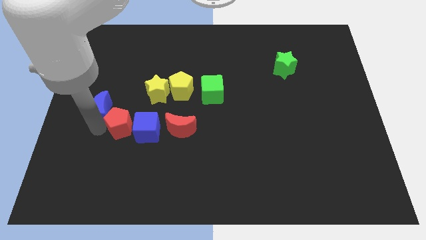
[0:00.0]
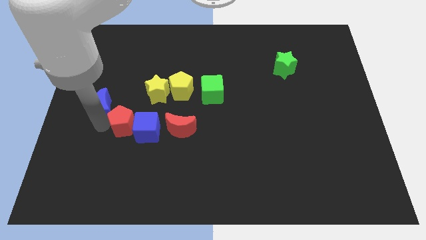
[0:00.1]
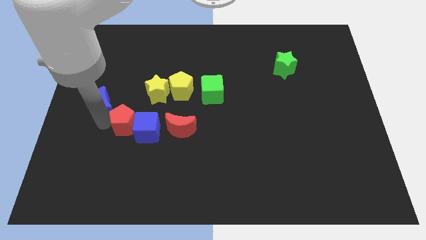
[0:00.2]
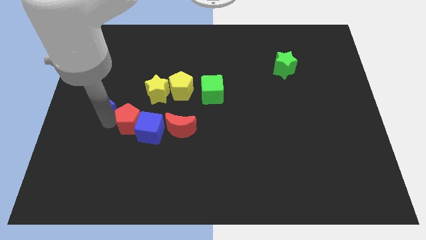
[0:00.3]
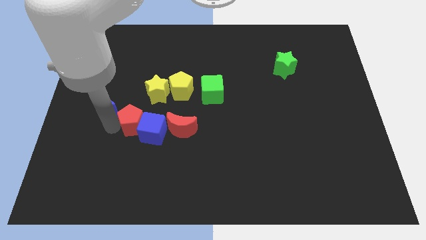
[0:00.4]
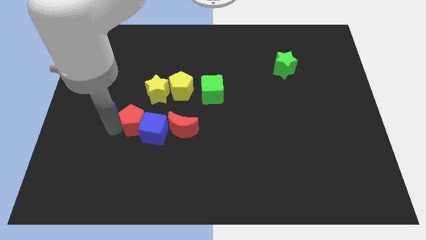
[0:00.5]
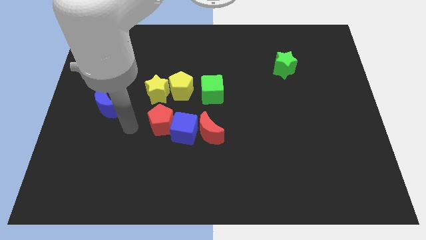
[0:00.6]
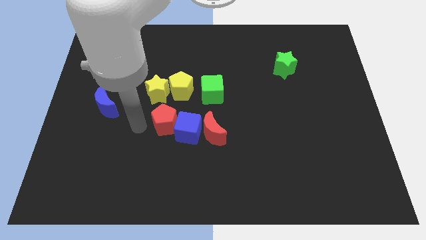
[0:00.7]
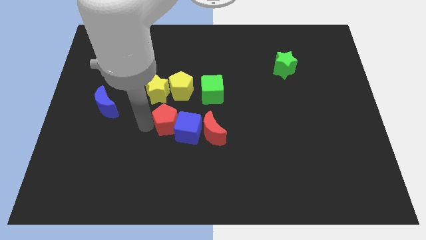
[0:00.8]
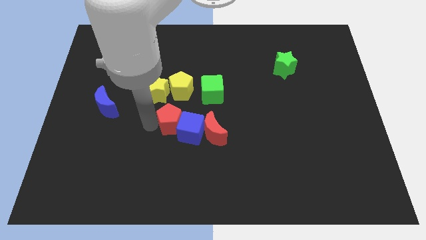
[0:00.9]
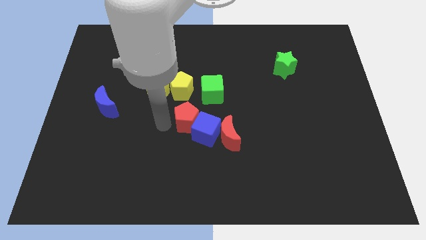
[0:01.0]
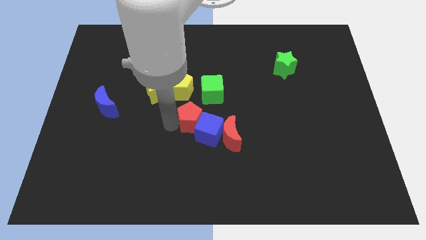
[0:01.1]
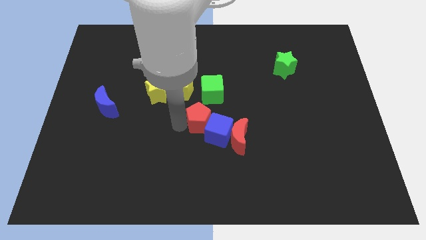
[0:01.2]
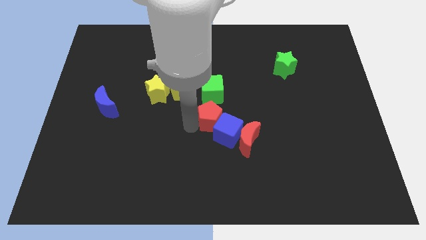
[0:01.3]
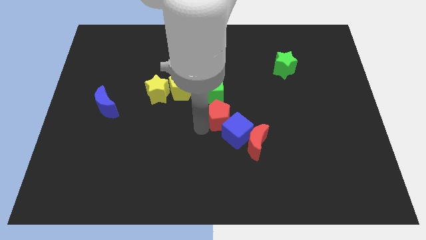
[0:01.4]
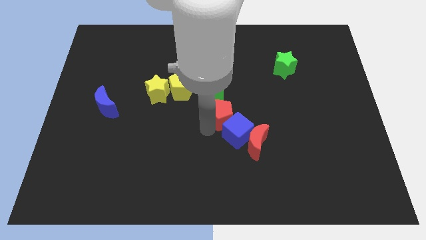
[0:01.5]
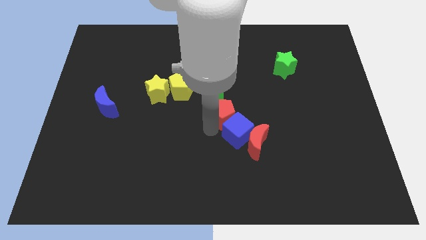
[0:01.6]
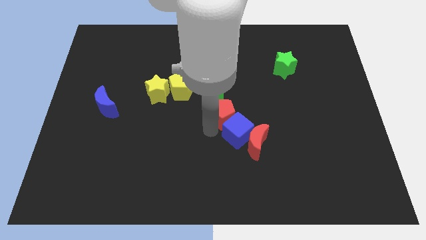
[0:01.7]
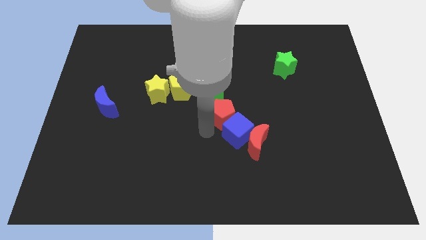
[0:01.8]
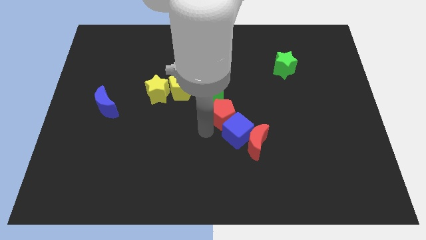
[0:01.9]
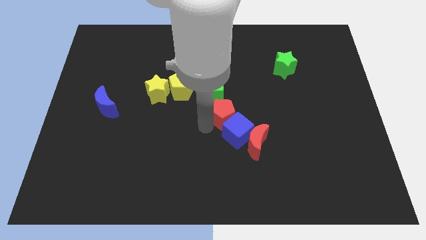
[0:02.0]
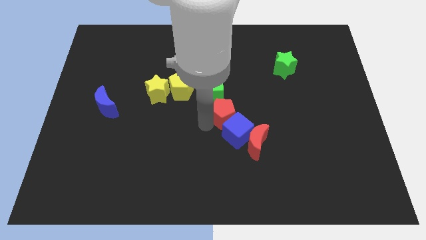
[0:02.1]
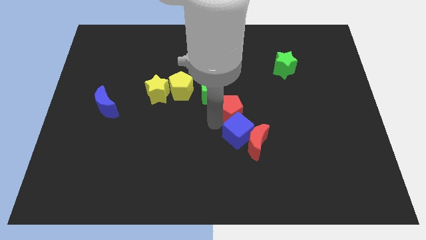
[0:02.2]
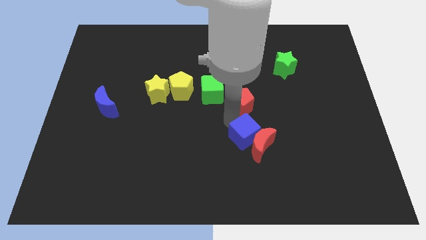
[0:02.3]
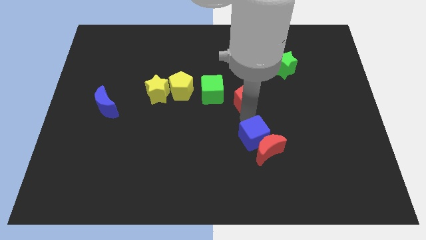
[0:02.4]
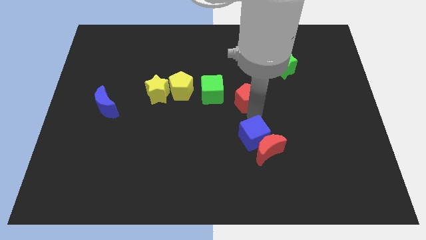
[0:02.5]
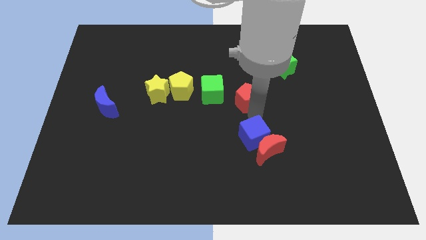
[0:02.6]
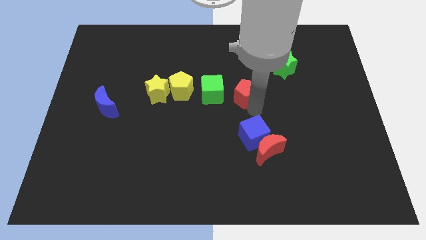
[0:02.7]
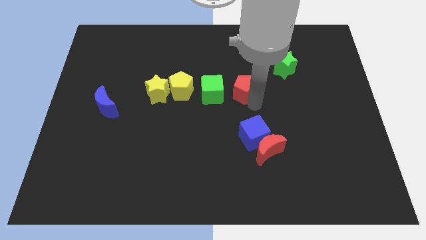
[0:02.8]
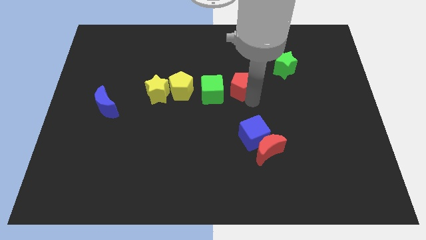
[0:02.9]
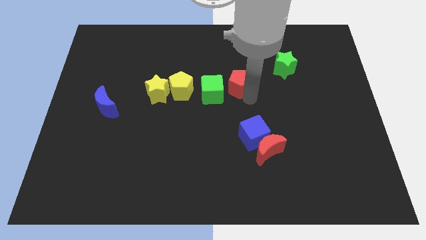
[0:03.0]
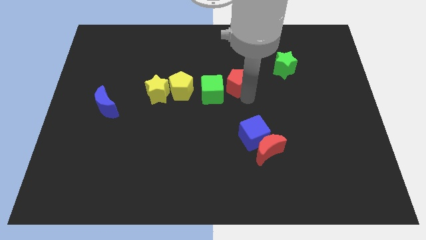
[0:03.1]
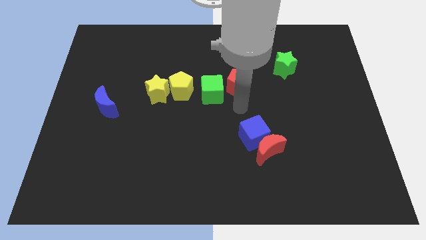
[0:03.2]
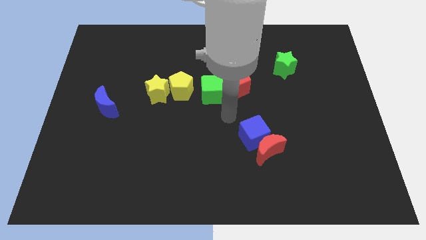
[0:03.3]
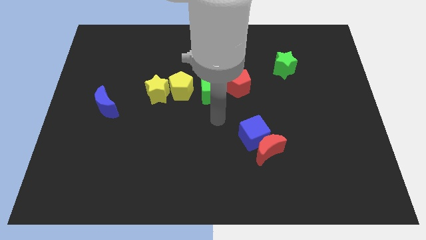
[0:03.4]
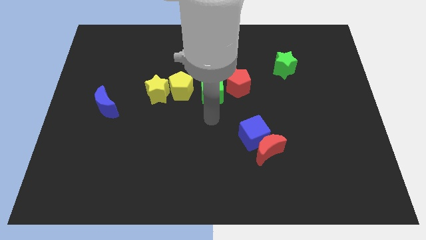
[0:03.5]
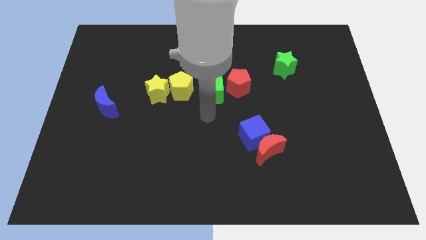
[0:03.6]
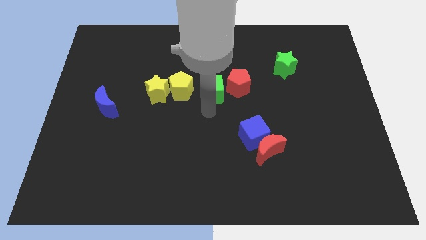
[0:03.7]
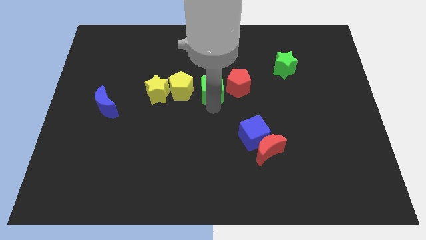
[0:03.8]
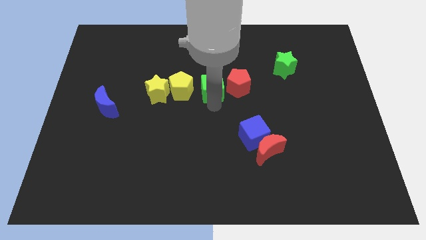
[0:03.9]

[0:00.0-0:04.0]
push the red pentagon into the blue cube

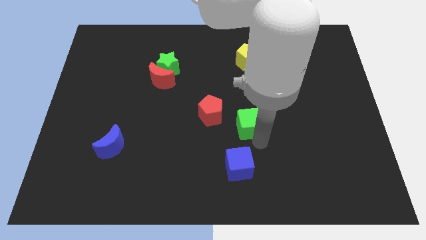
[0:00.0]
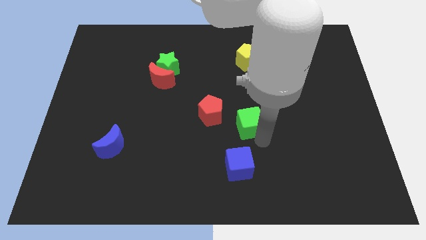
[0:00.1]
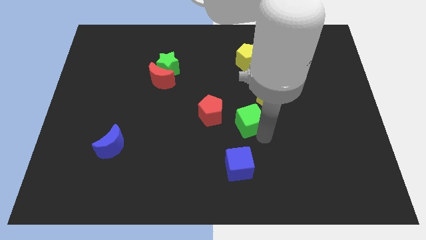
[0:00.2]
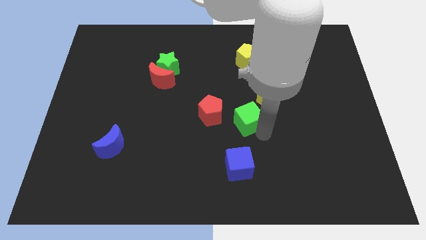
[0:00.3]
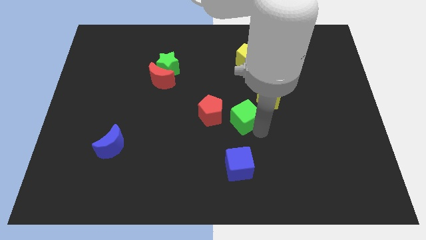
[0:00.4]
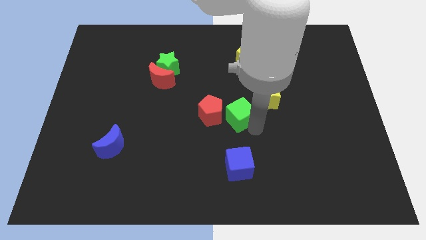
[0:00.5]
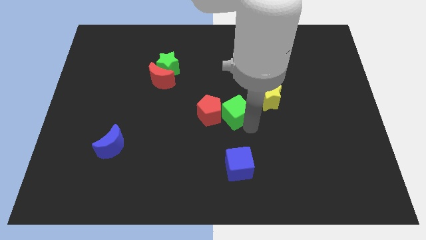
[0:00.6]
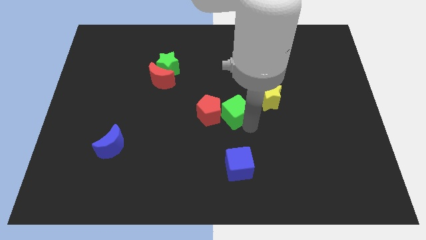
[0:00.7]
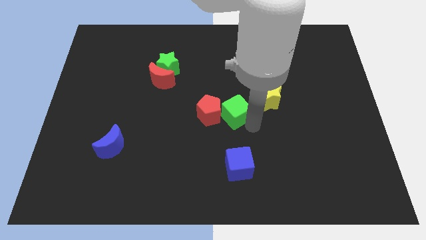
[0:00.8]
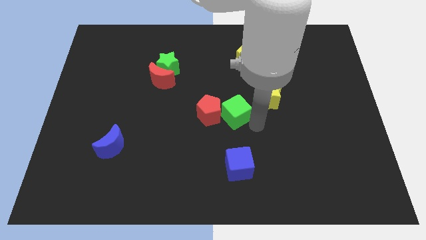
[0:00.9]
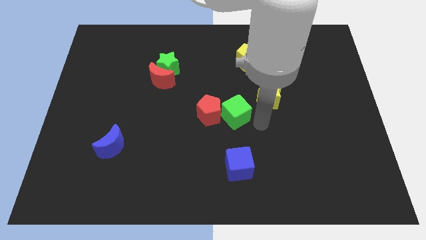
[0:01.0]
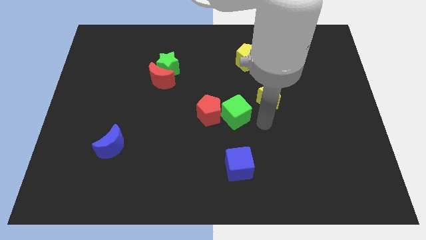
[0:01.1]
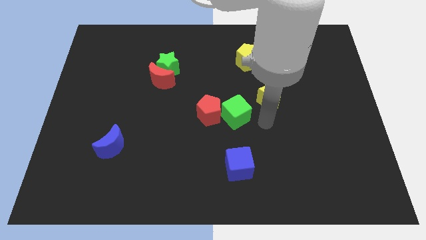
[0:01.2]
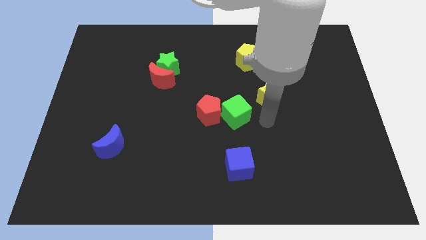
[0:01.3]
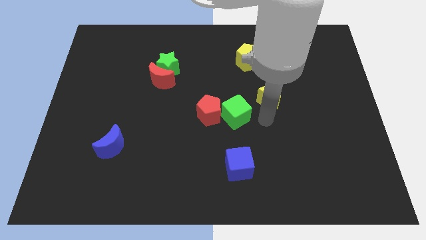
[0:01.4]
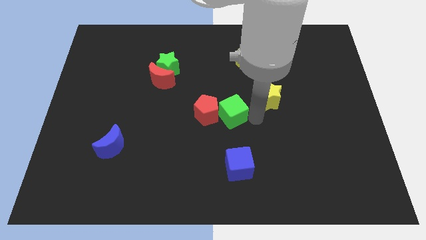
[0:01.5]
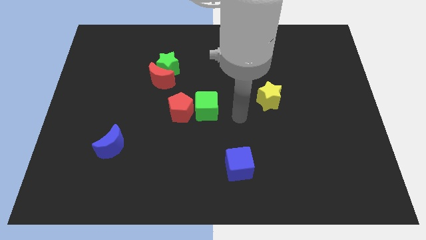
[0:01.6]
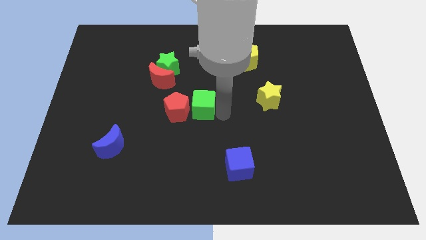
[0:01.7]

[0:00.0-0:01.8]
move the green cube toward the red pentagon

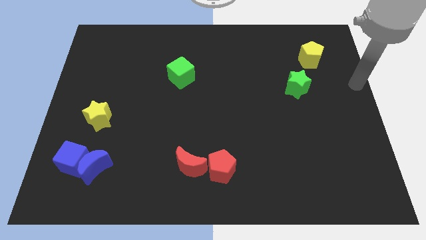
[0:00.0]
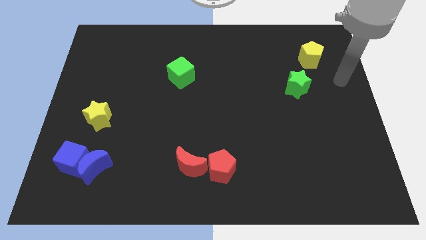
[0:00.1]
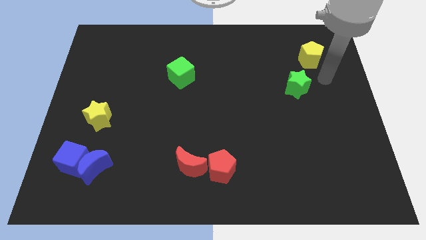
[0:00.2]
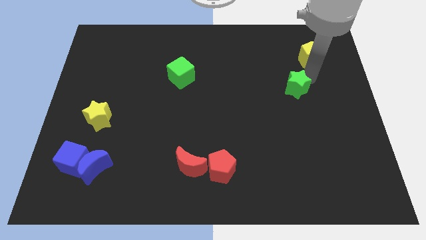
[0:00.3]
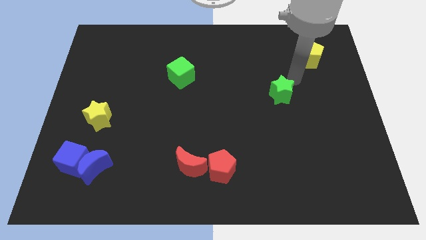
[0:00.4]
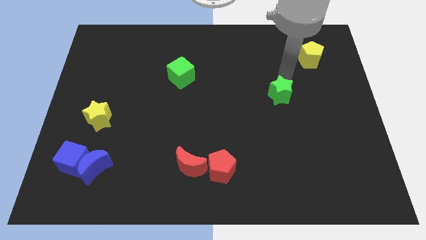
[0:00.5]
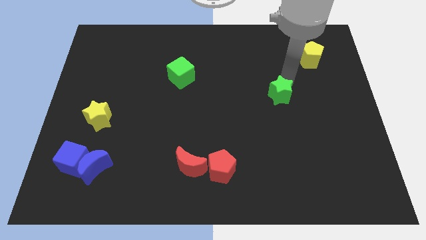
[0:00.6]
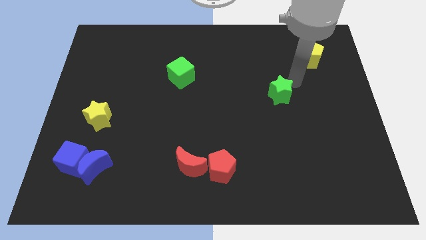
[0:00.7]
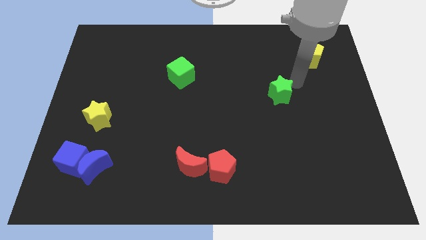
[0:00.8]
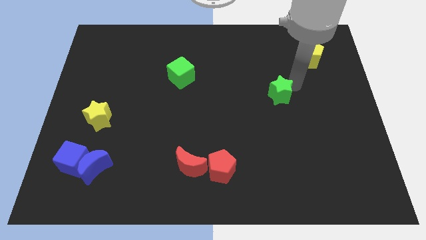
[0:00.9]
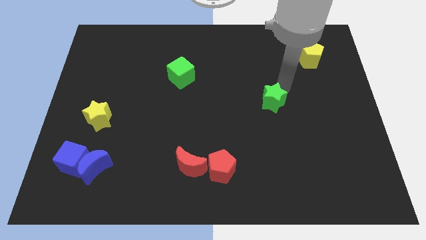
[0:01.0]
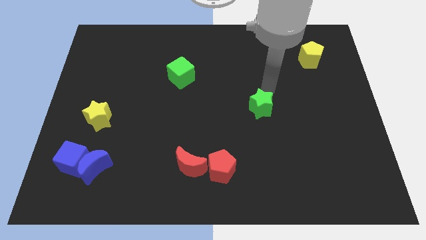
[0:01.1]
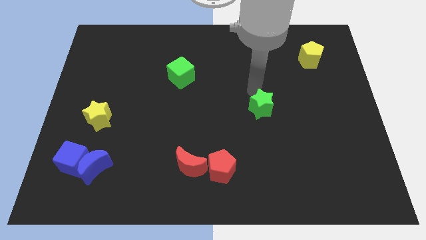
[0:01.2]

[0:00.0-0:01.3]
push the green star towards the center of the board

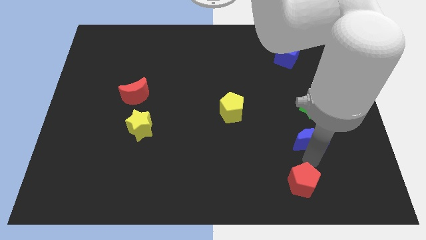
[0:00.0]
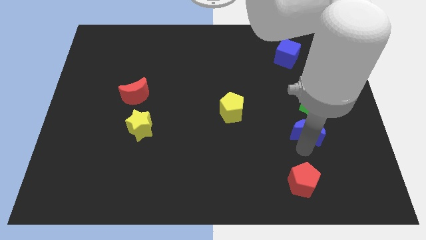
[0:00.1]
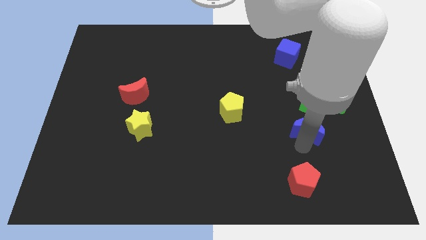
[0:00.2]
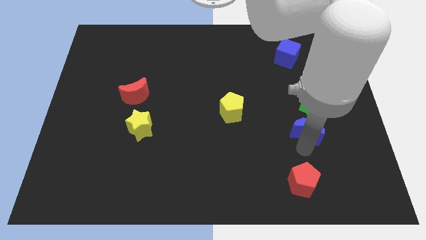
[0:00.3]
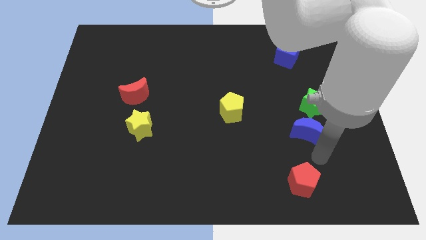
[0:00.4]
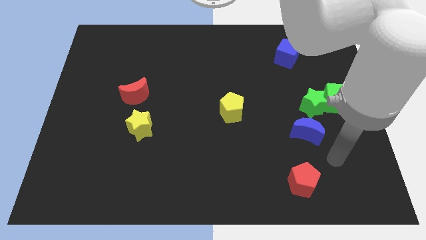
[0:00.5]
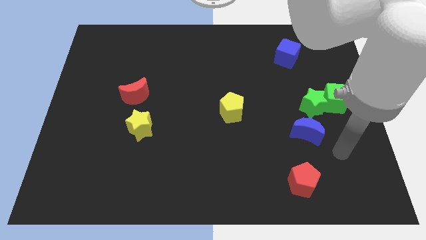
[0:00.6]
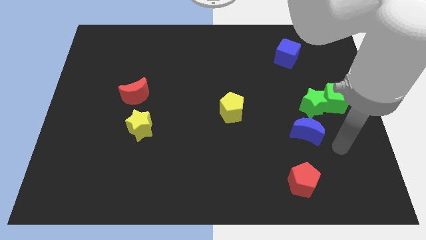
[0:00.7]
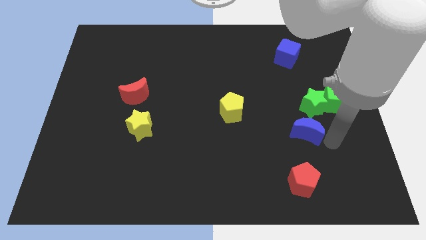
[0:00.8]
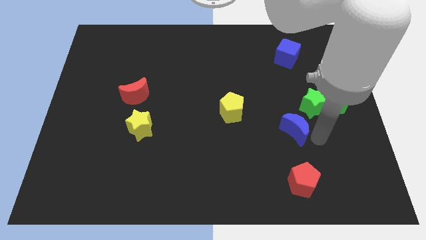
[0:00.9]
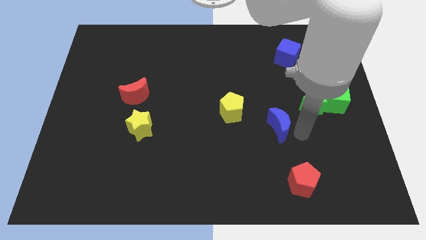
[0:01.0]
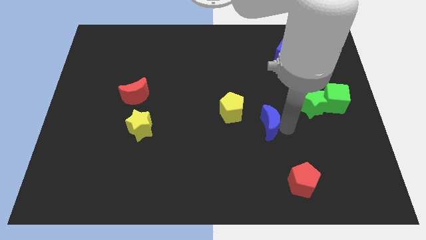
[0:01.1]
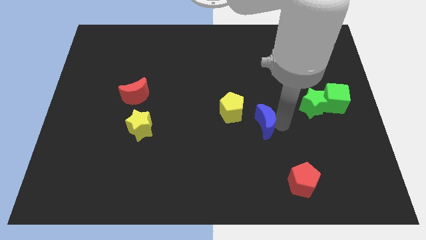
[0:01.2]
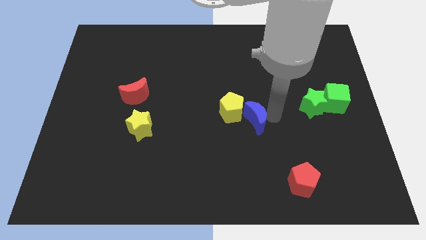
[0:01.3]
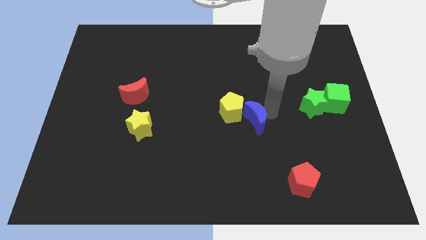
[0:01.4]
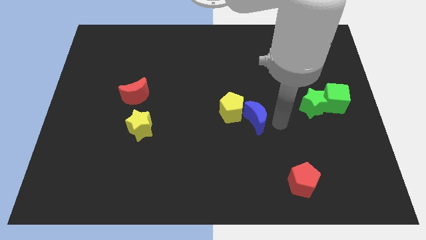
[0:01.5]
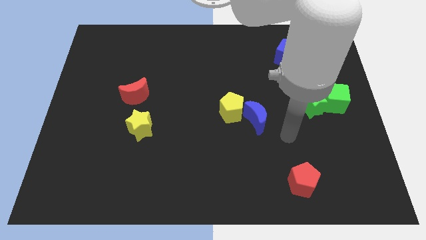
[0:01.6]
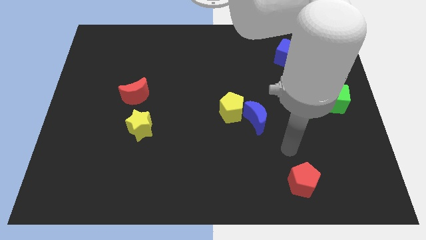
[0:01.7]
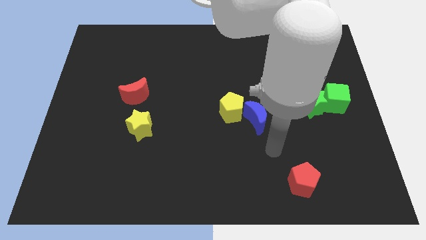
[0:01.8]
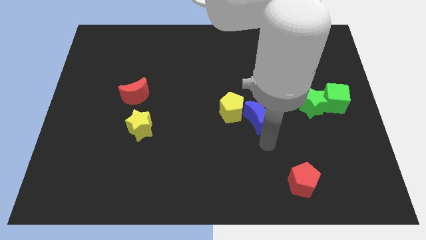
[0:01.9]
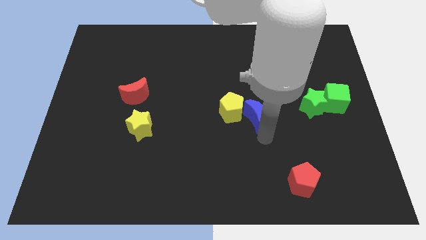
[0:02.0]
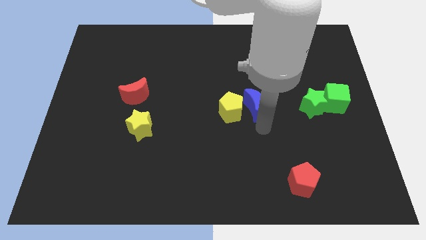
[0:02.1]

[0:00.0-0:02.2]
place the blue crescent right to the yellow pentagon
